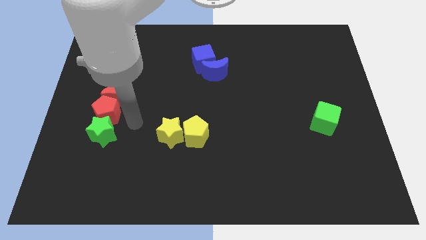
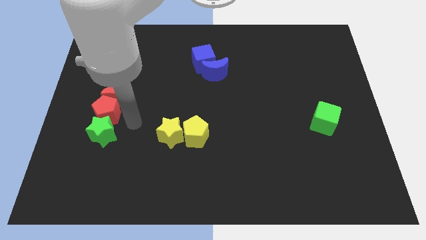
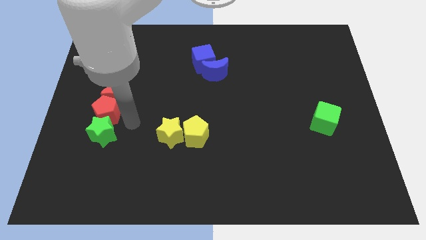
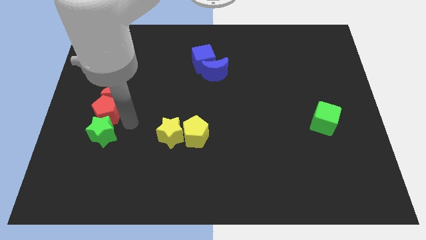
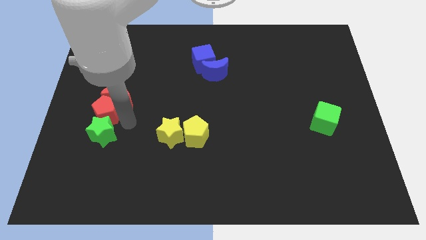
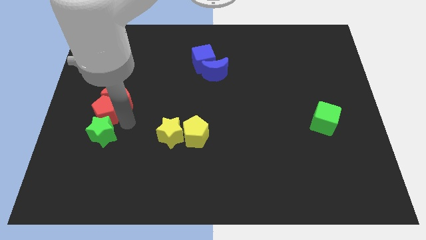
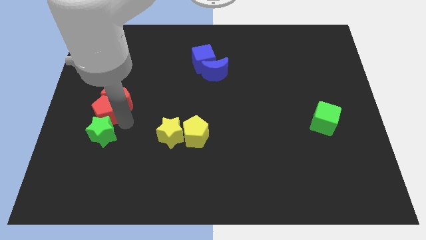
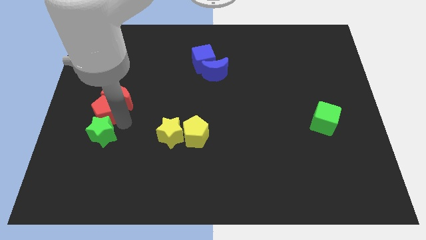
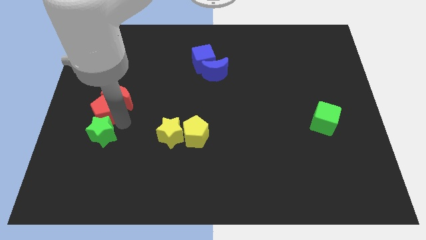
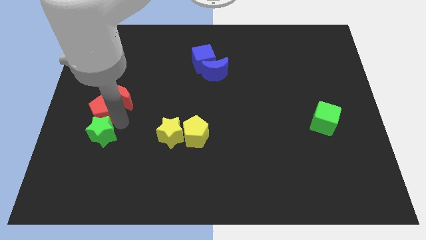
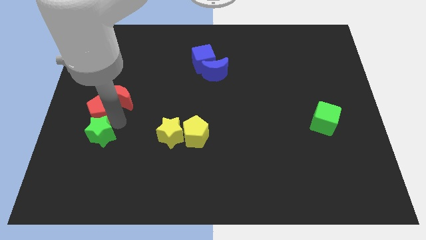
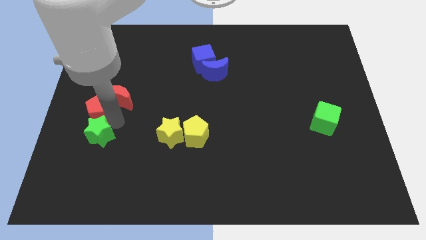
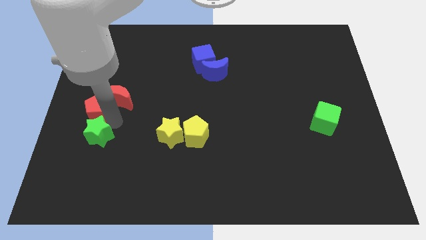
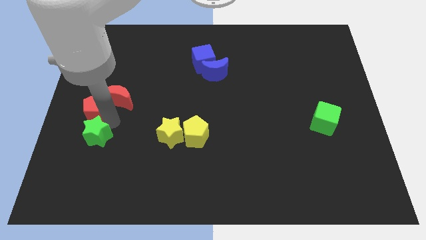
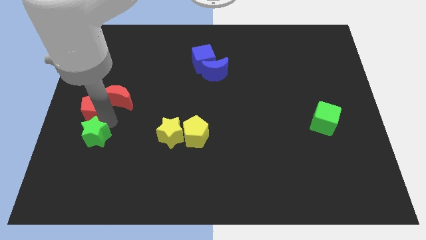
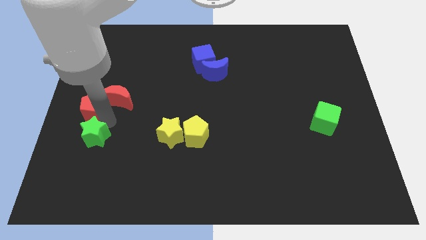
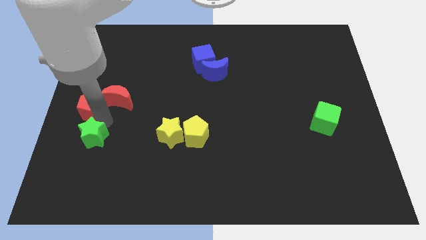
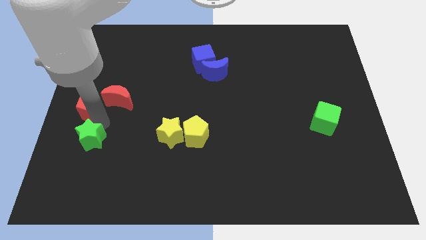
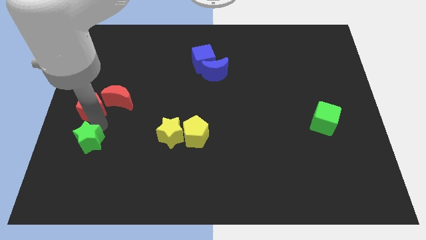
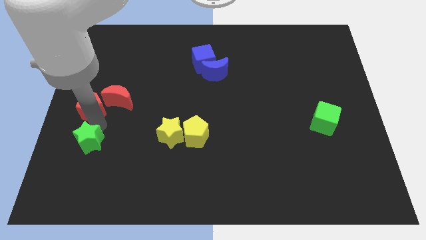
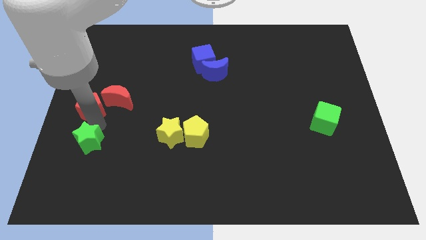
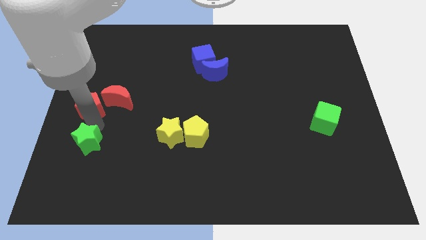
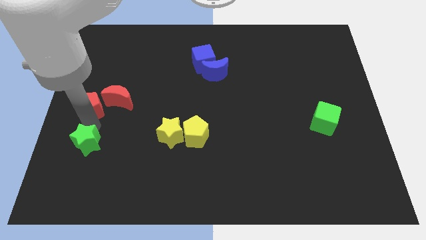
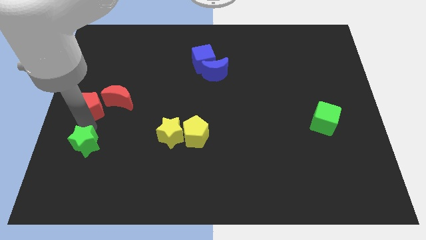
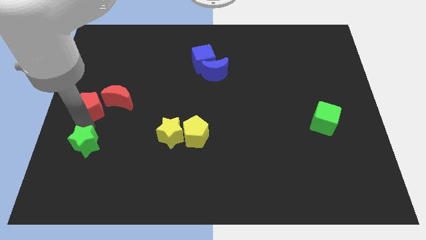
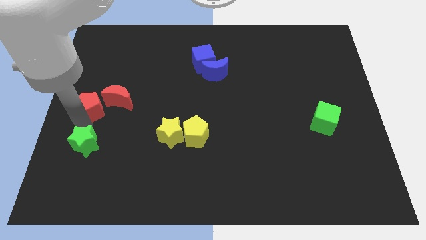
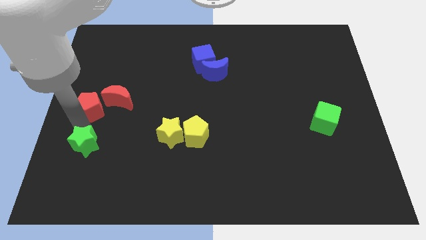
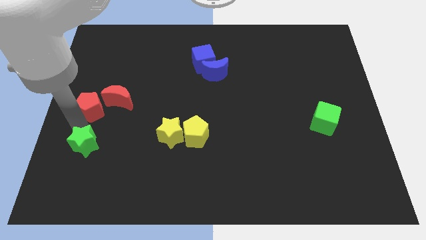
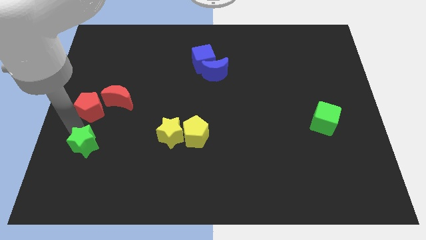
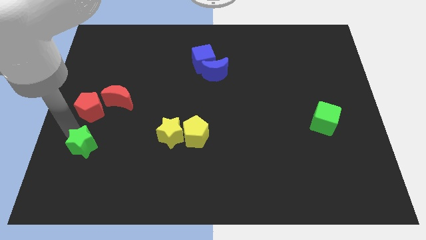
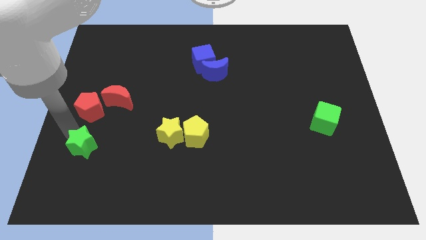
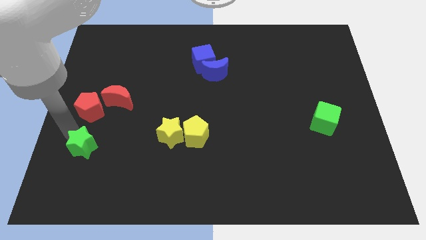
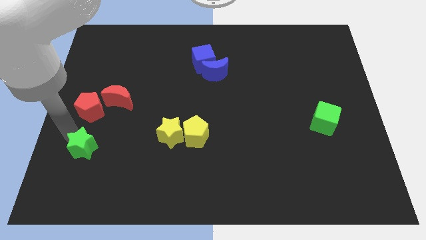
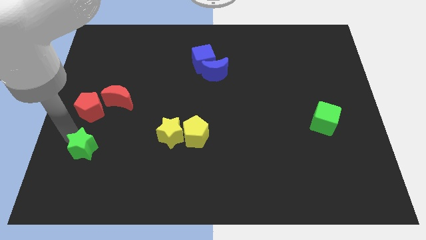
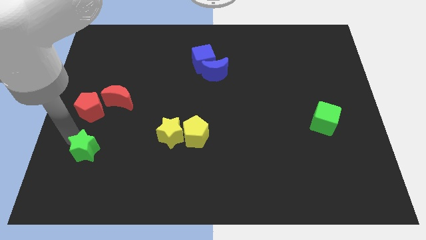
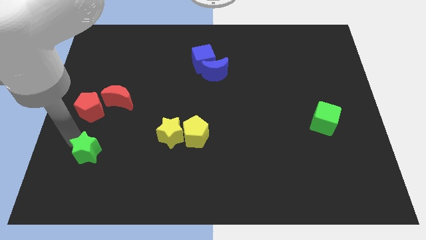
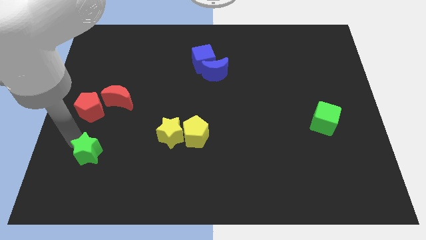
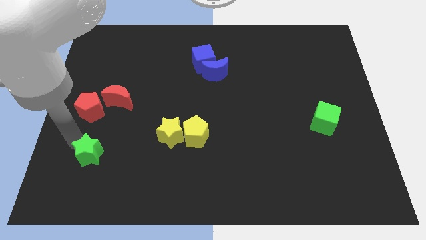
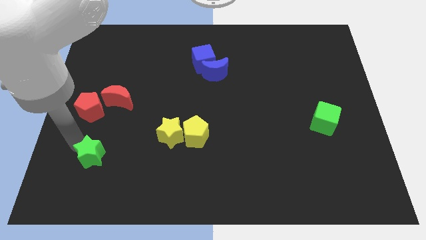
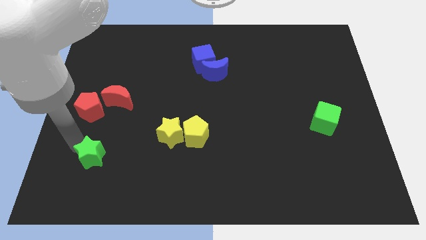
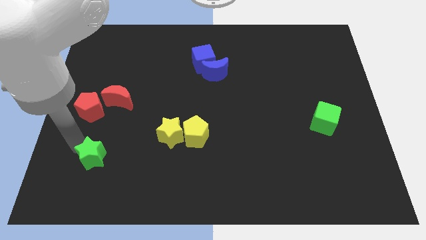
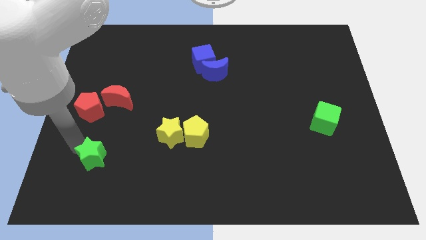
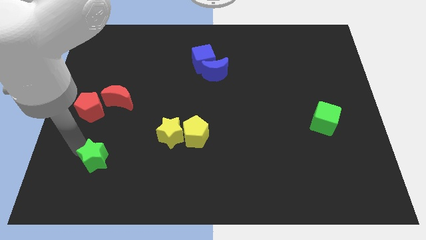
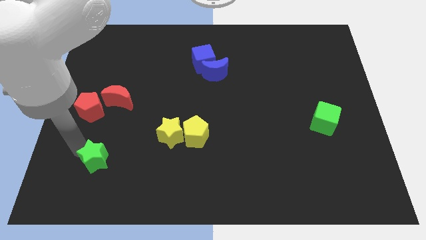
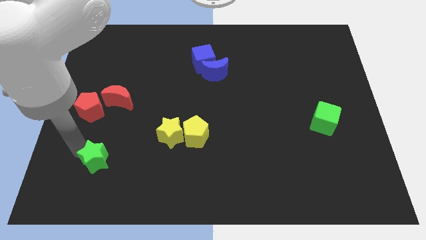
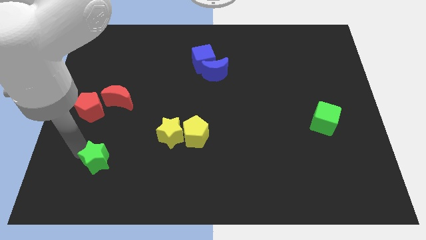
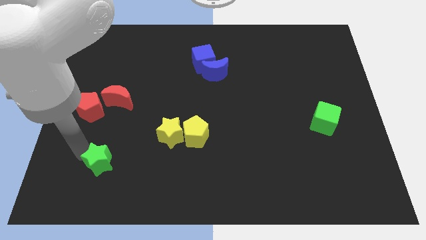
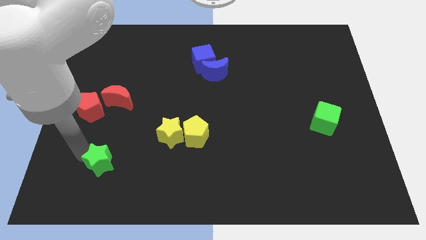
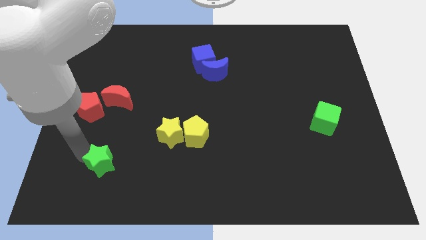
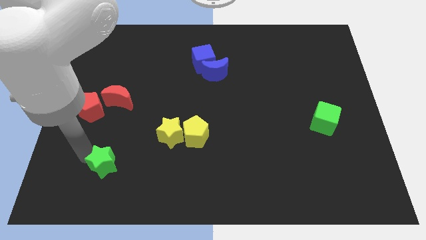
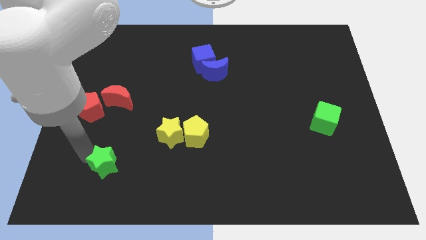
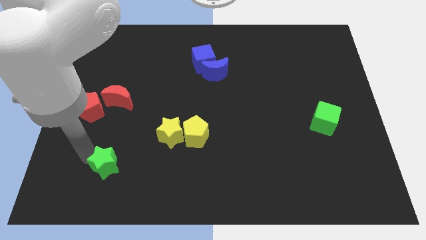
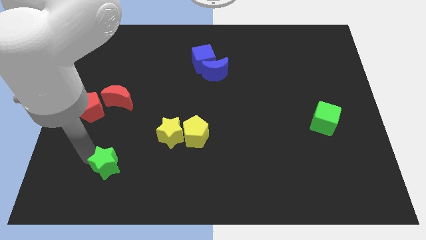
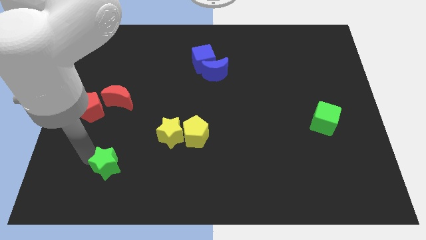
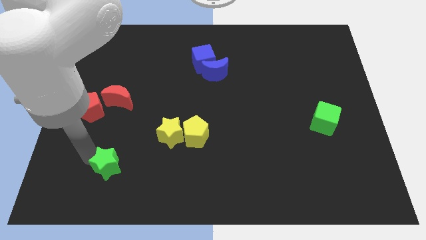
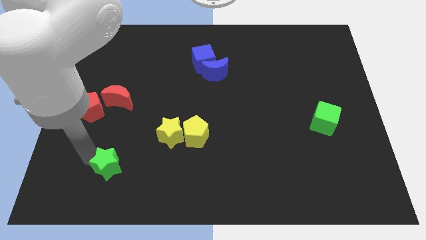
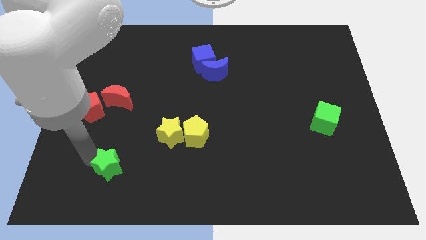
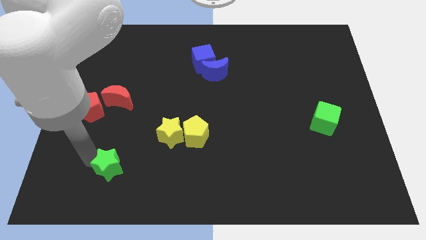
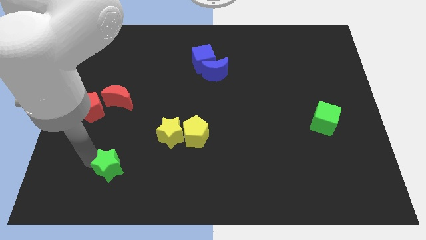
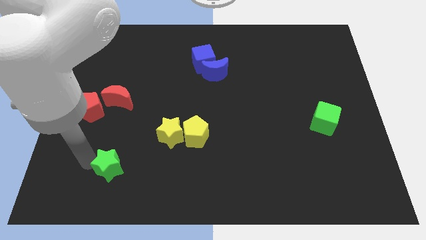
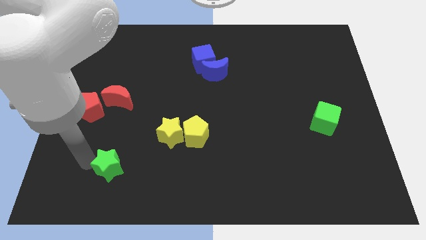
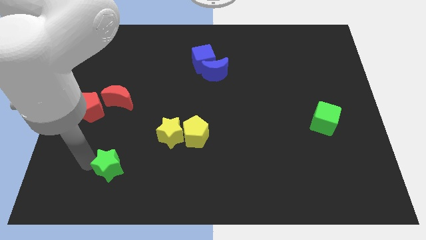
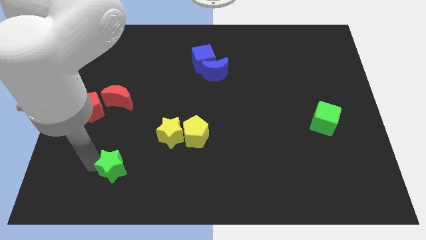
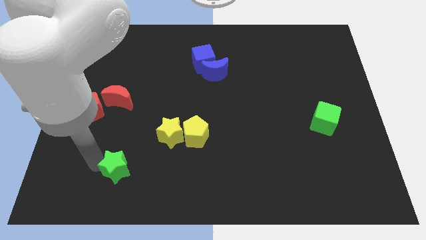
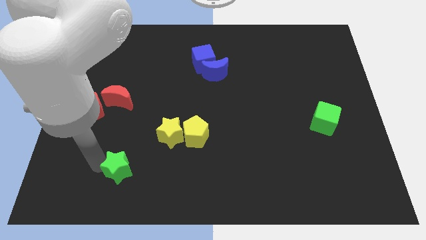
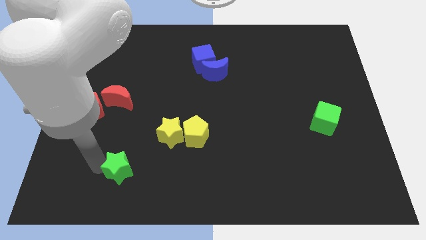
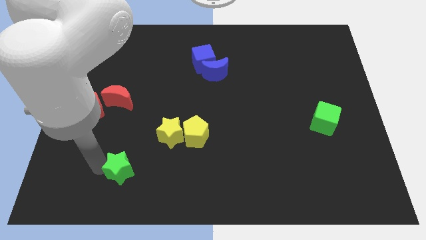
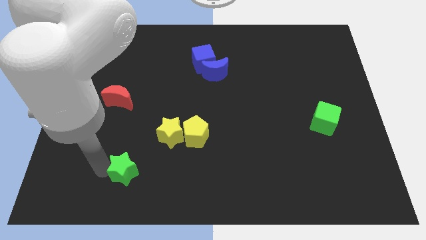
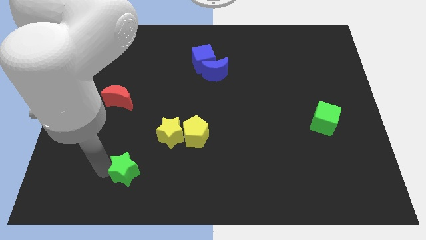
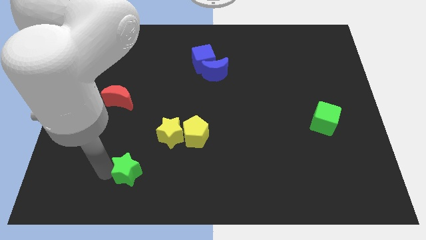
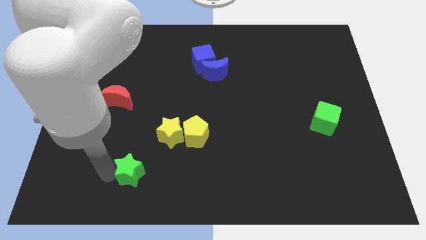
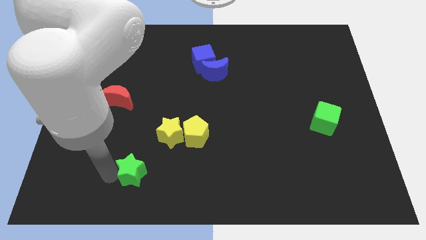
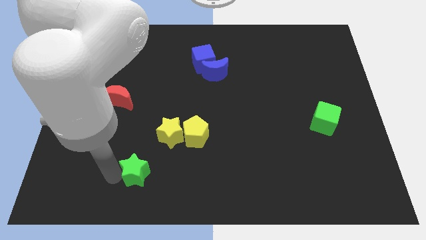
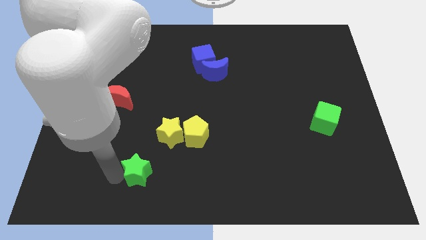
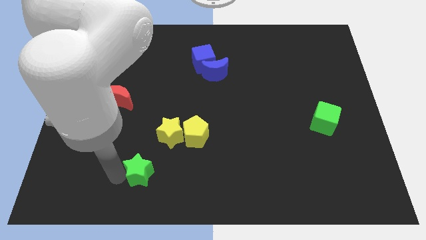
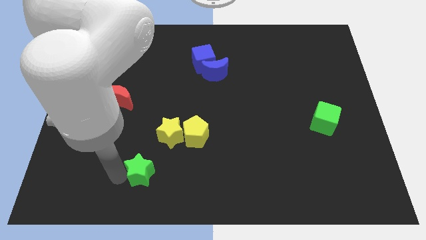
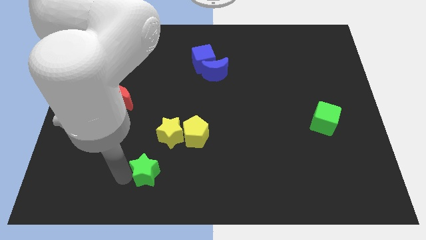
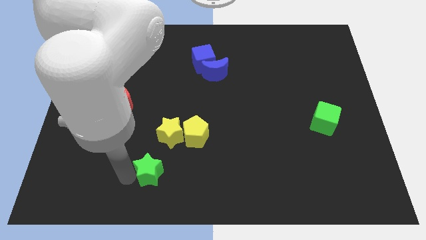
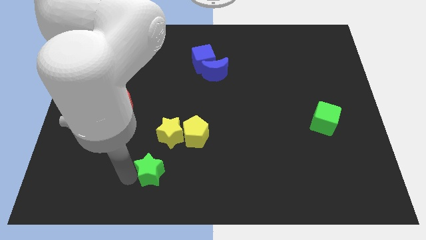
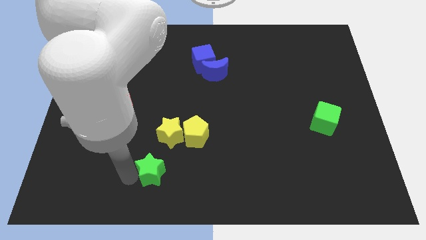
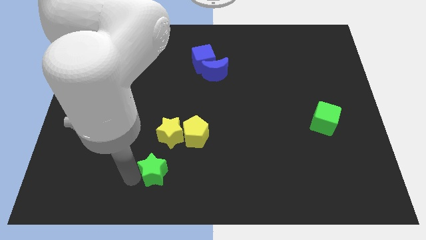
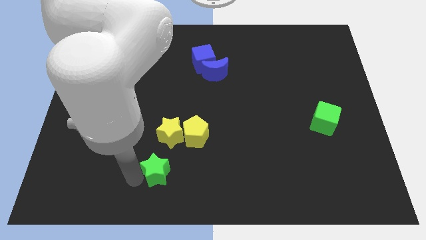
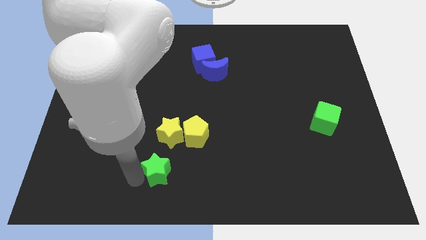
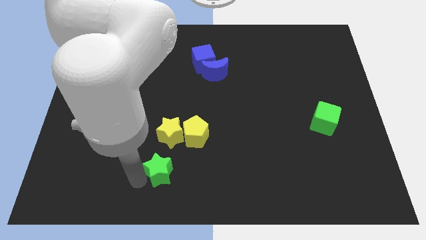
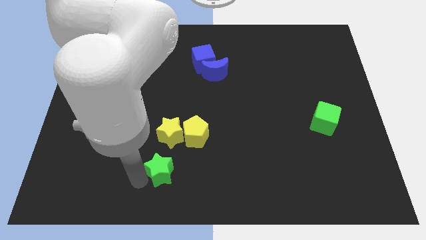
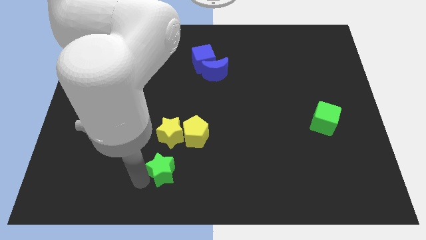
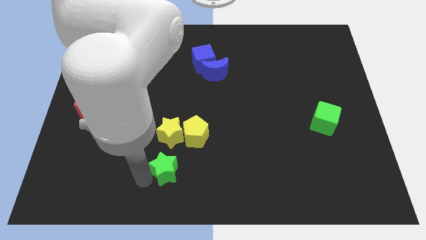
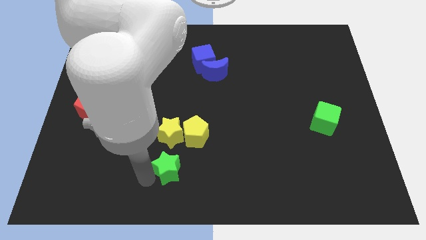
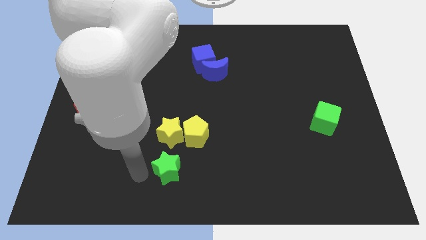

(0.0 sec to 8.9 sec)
place the green star to the bottom side of the yellow star
